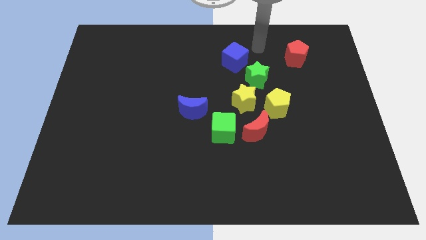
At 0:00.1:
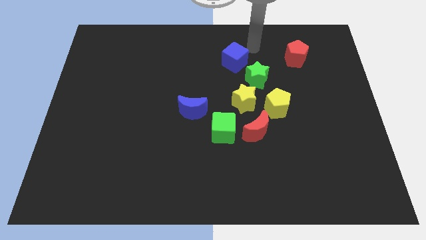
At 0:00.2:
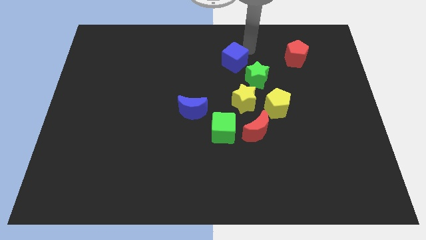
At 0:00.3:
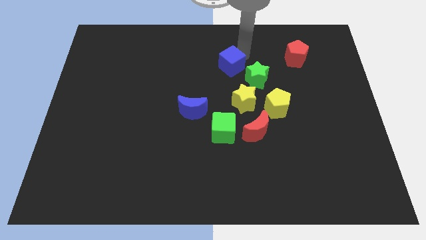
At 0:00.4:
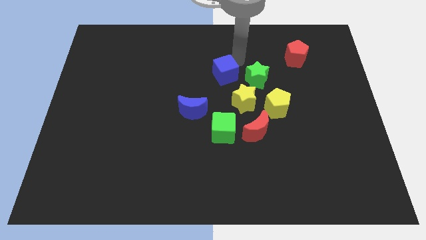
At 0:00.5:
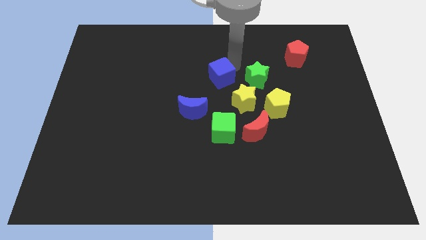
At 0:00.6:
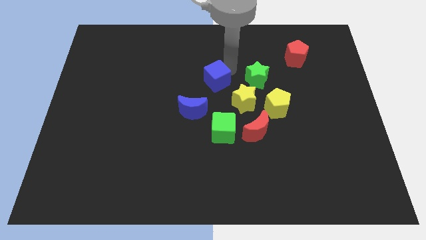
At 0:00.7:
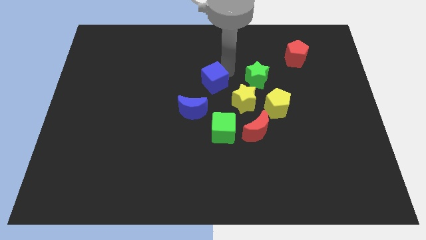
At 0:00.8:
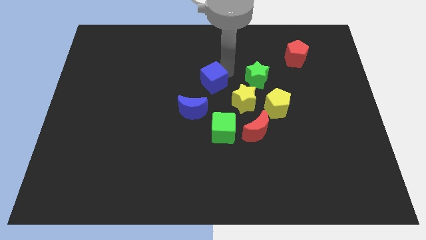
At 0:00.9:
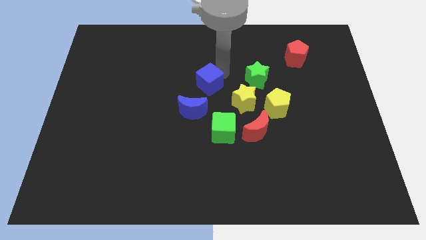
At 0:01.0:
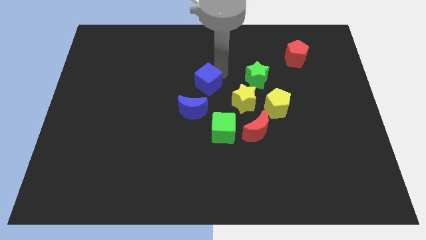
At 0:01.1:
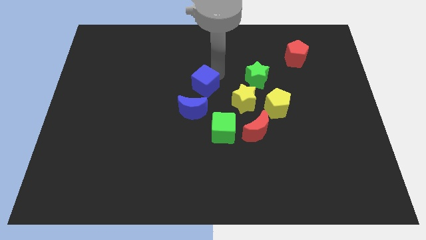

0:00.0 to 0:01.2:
place the blue cube above the blue crescent

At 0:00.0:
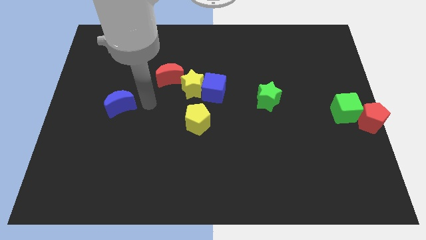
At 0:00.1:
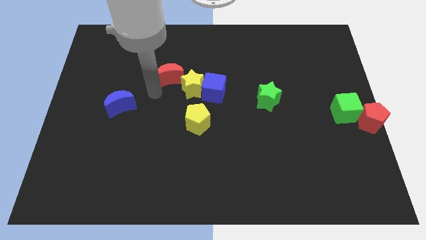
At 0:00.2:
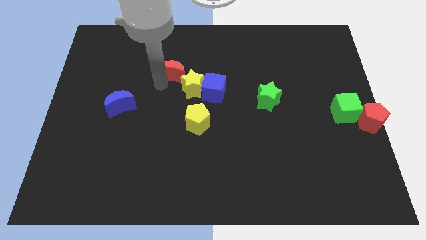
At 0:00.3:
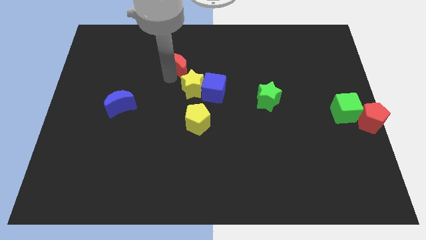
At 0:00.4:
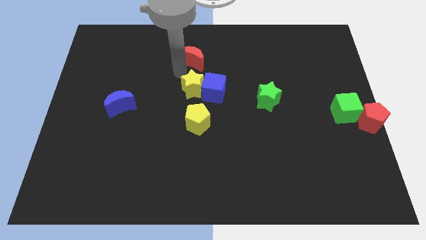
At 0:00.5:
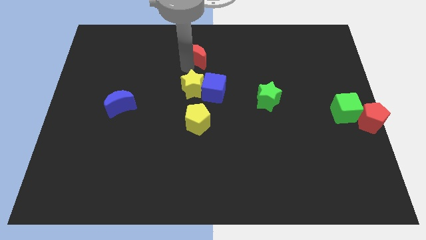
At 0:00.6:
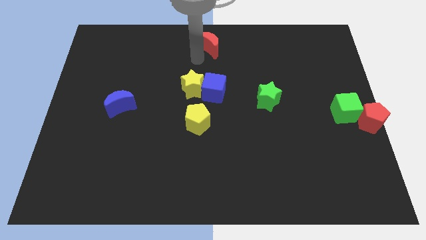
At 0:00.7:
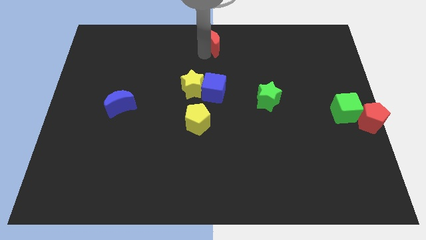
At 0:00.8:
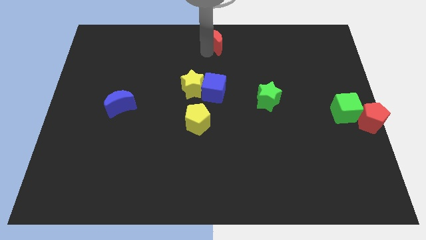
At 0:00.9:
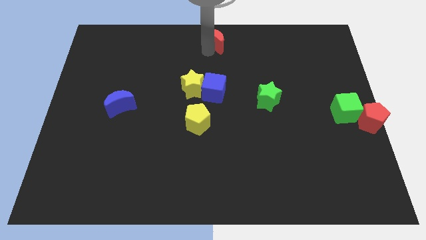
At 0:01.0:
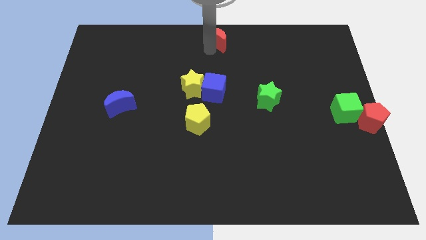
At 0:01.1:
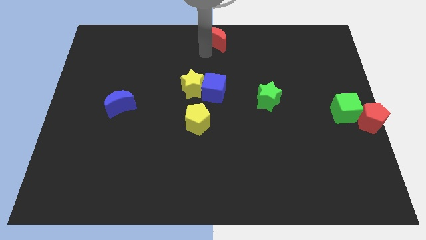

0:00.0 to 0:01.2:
place the red crescent towards the top center of the board

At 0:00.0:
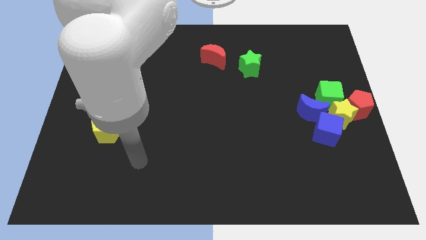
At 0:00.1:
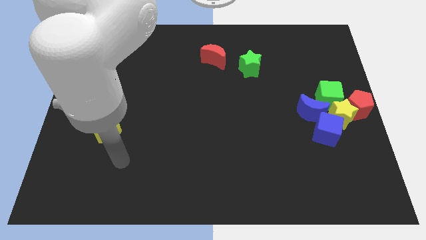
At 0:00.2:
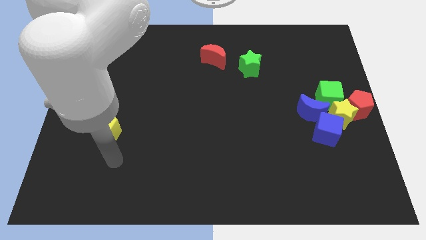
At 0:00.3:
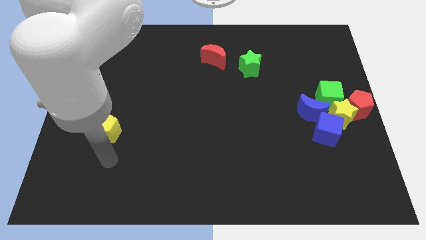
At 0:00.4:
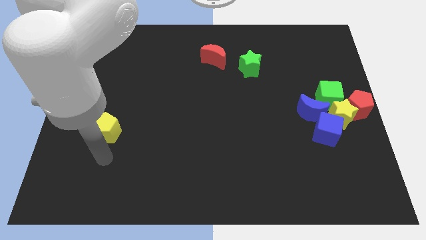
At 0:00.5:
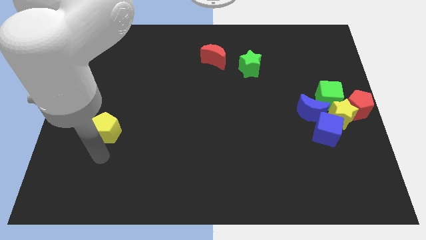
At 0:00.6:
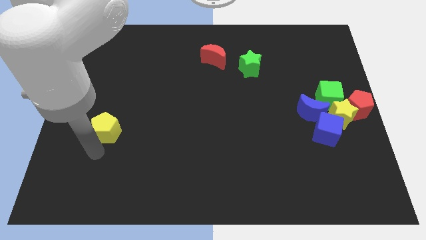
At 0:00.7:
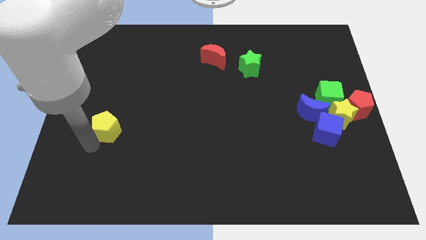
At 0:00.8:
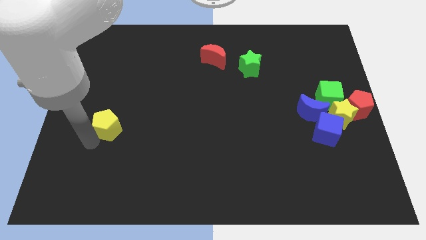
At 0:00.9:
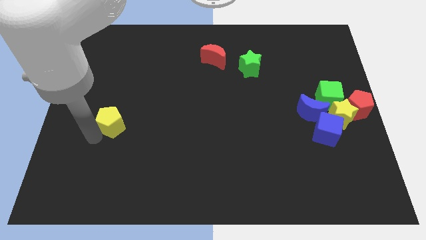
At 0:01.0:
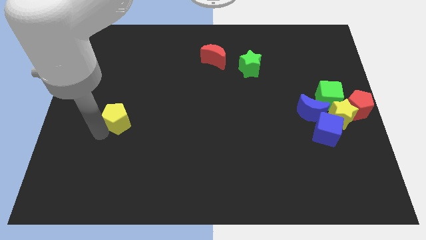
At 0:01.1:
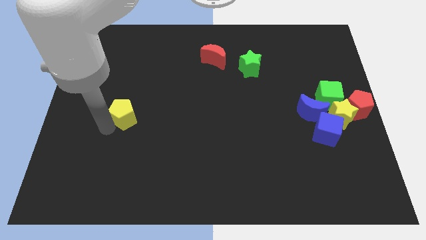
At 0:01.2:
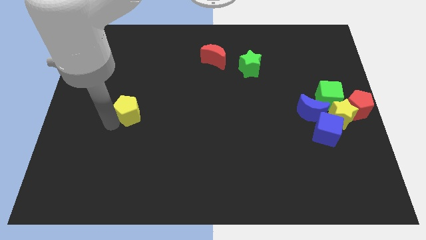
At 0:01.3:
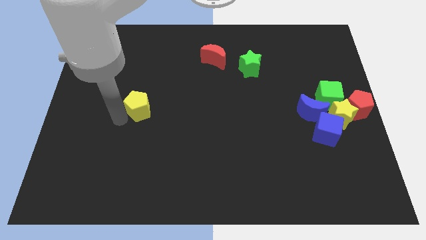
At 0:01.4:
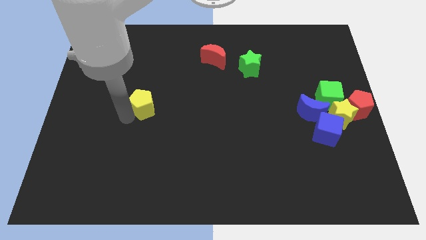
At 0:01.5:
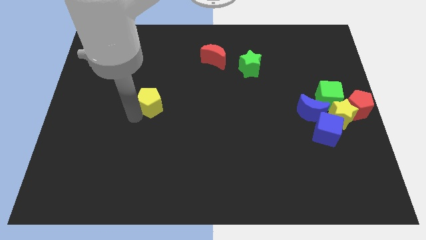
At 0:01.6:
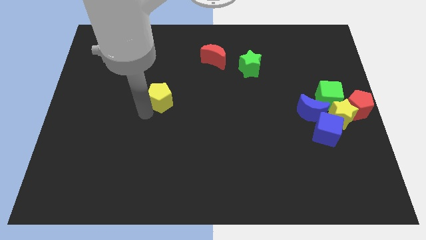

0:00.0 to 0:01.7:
move the yellow pentagon towards the top of the board

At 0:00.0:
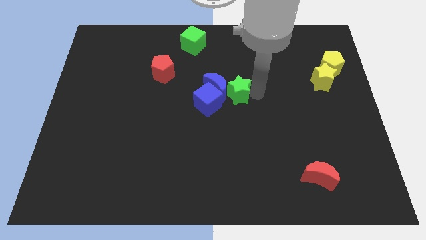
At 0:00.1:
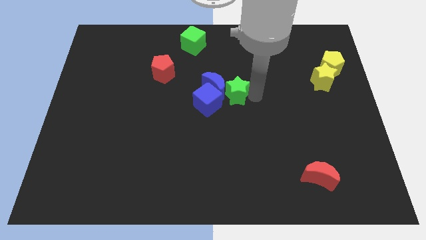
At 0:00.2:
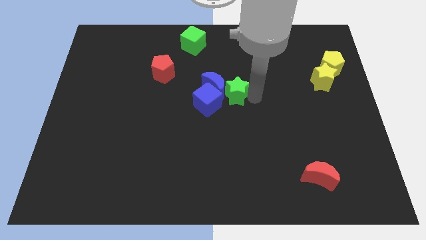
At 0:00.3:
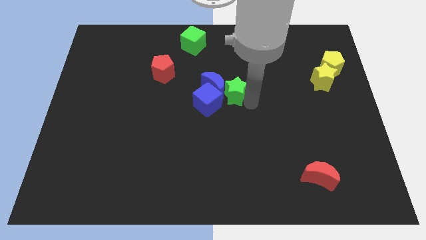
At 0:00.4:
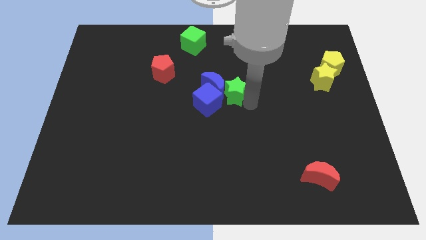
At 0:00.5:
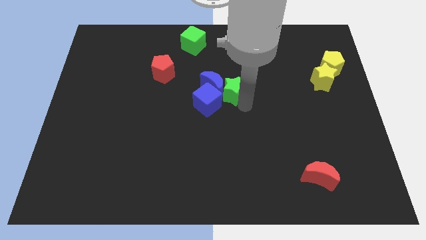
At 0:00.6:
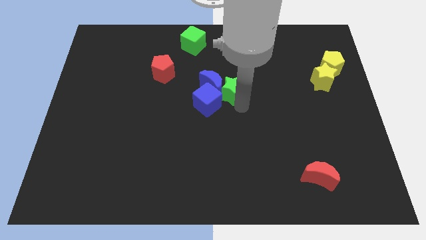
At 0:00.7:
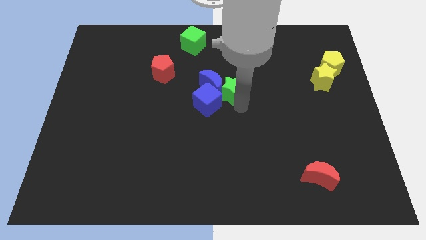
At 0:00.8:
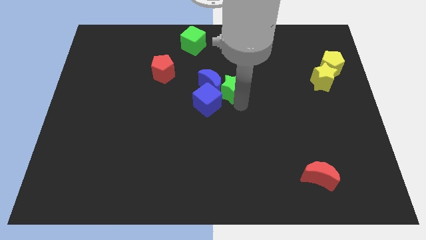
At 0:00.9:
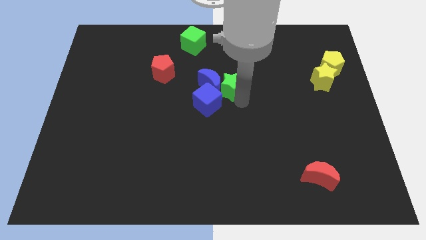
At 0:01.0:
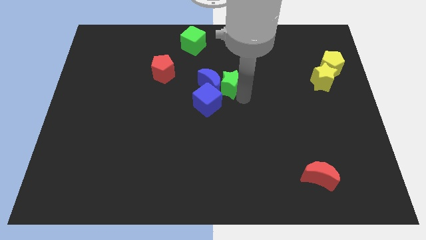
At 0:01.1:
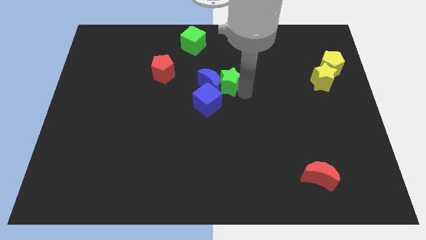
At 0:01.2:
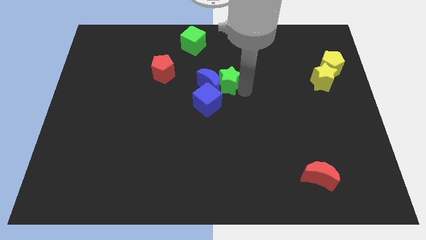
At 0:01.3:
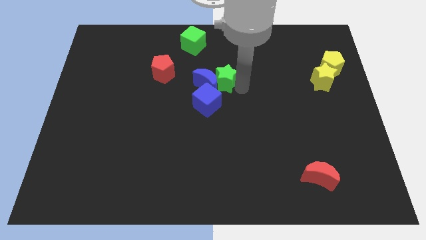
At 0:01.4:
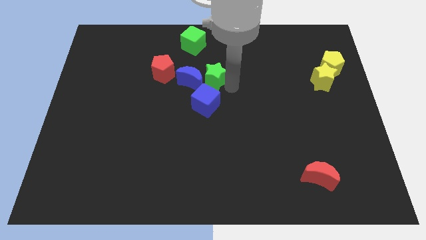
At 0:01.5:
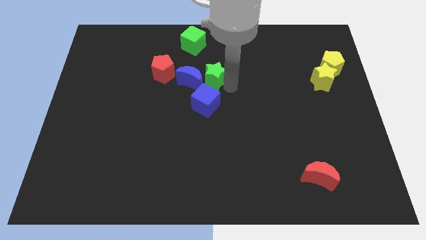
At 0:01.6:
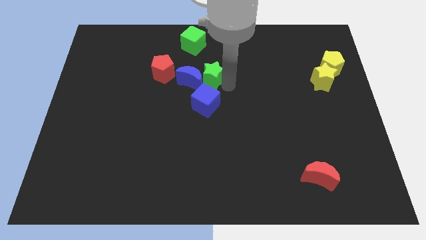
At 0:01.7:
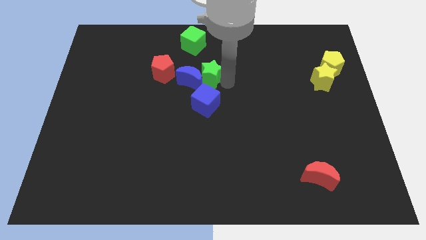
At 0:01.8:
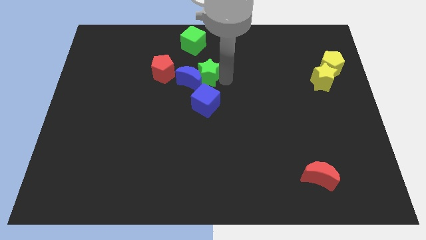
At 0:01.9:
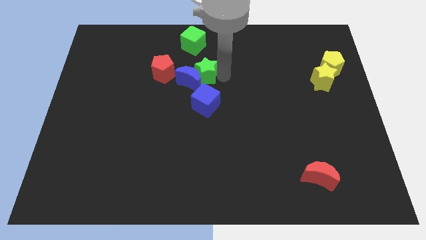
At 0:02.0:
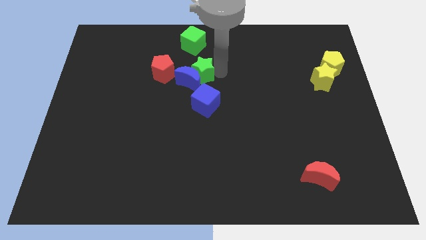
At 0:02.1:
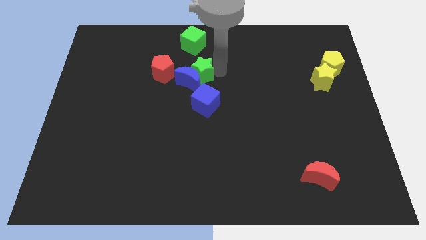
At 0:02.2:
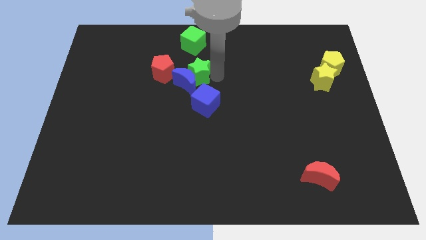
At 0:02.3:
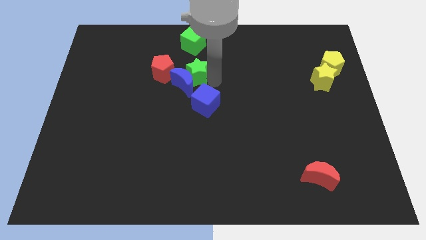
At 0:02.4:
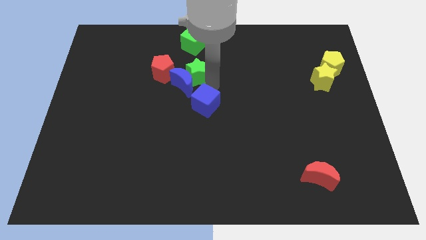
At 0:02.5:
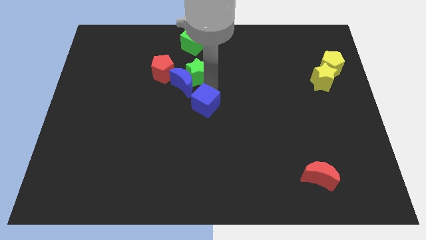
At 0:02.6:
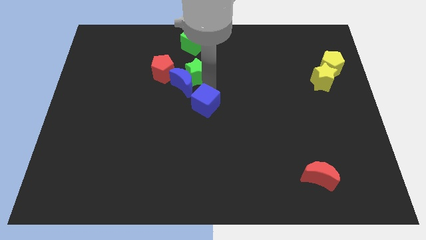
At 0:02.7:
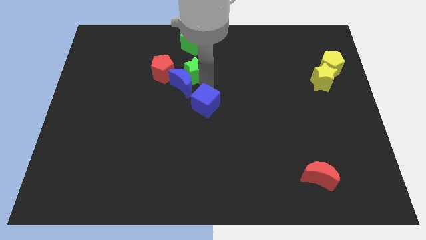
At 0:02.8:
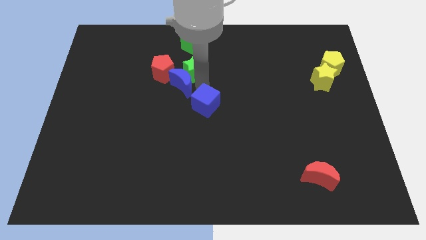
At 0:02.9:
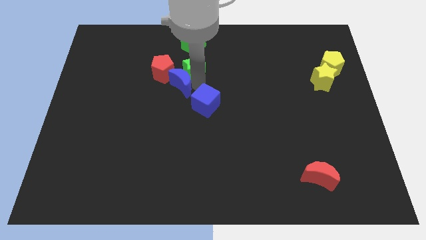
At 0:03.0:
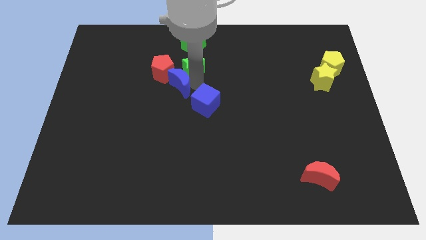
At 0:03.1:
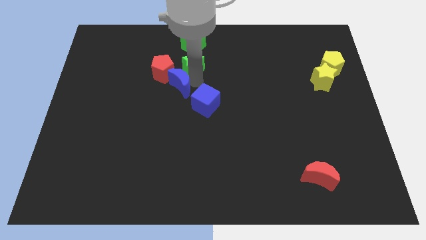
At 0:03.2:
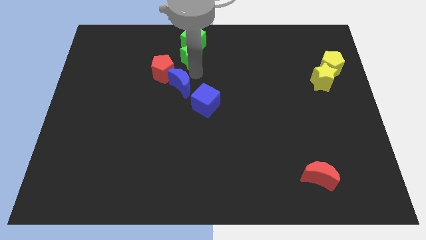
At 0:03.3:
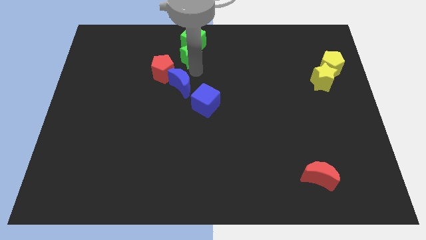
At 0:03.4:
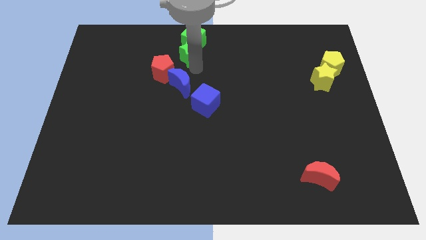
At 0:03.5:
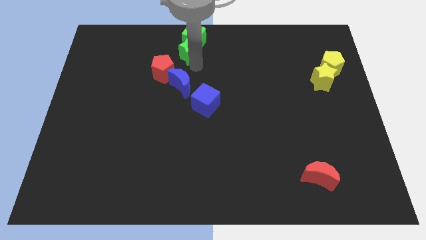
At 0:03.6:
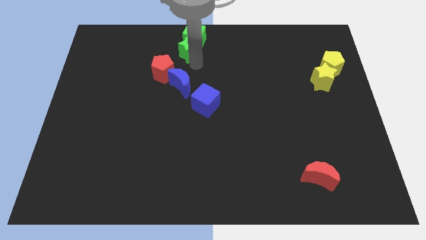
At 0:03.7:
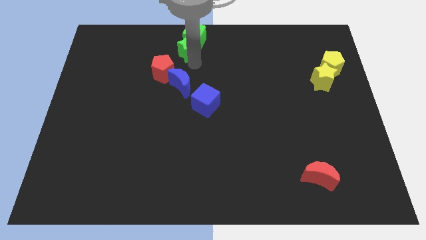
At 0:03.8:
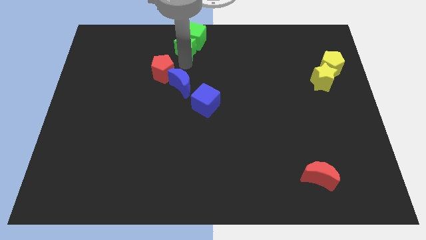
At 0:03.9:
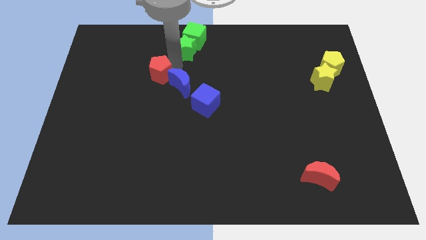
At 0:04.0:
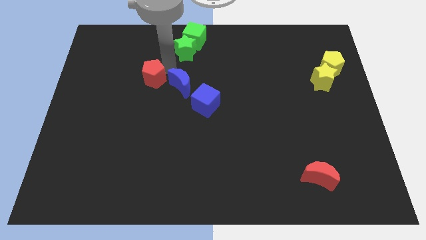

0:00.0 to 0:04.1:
add green star into green cube

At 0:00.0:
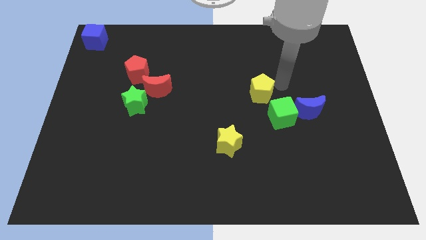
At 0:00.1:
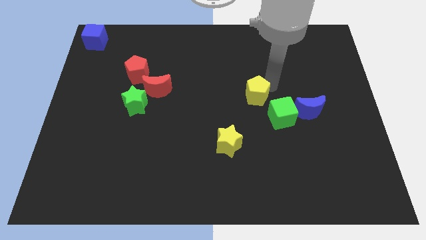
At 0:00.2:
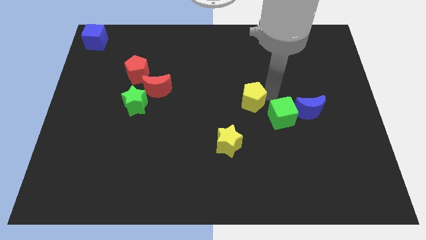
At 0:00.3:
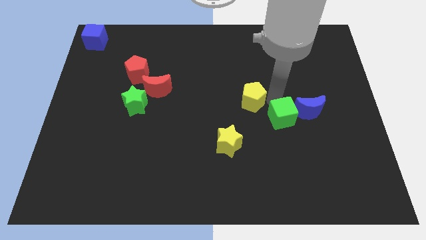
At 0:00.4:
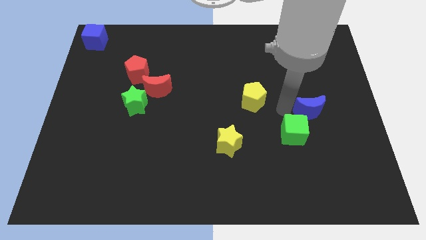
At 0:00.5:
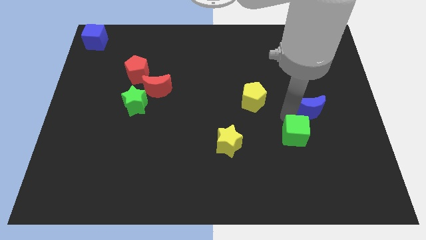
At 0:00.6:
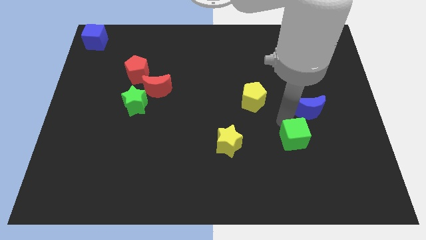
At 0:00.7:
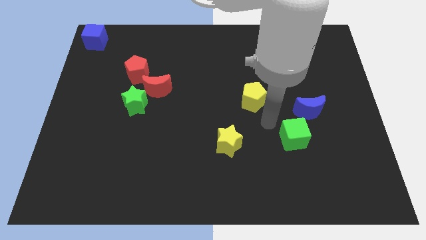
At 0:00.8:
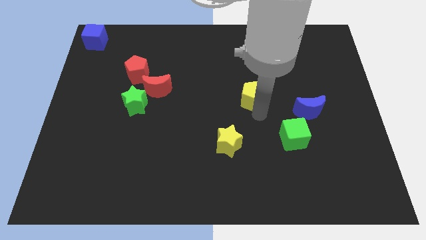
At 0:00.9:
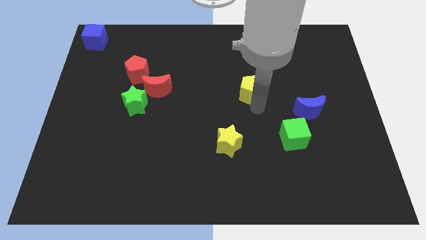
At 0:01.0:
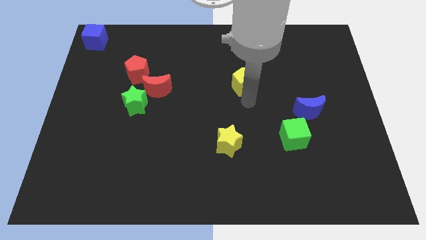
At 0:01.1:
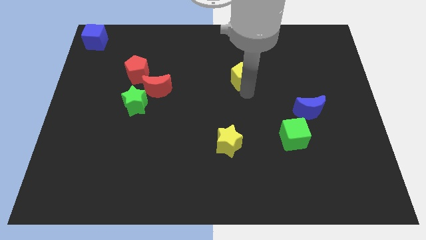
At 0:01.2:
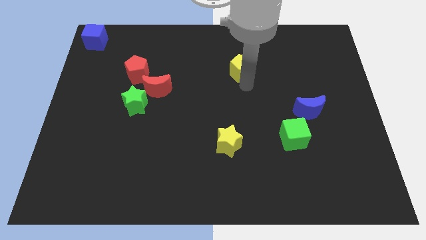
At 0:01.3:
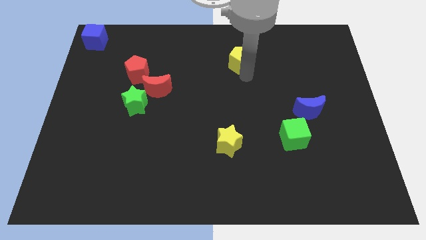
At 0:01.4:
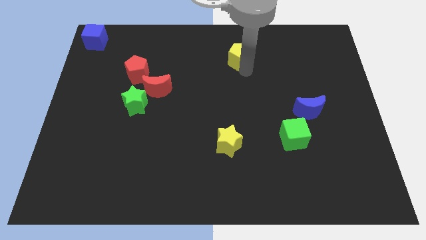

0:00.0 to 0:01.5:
separate yellow pentagon and the green cube
